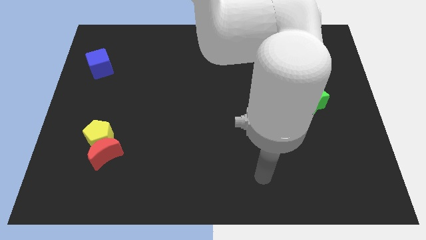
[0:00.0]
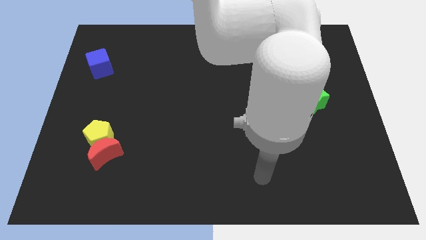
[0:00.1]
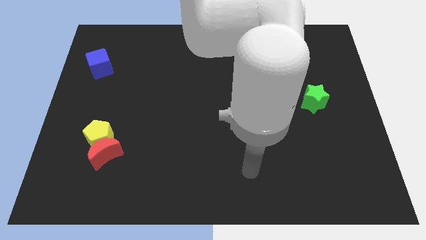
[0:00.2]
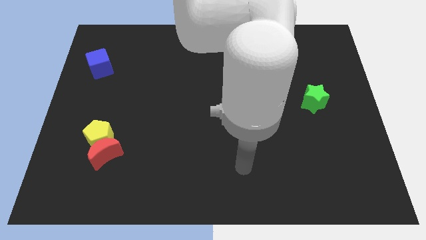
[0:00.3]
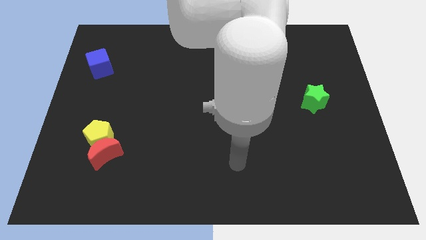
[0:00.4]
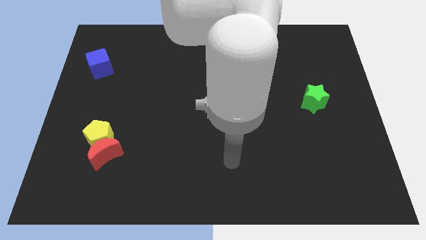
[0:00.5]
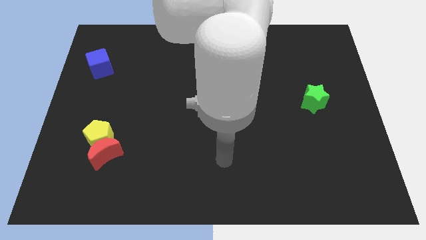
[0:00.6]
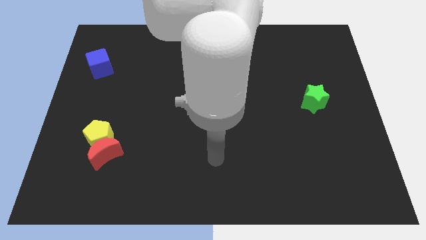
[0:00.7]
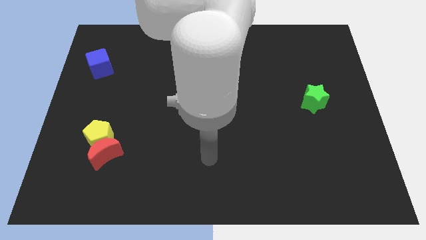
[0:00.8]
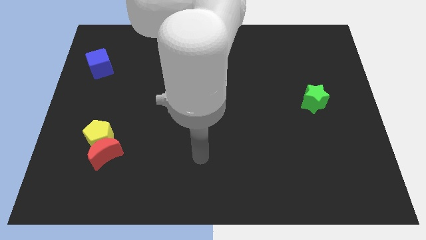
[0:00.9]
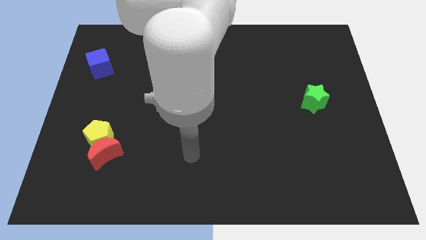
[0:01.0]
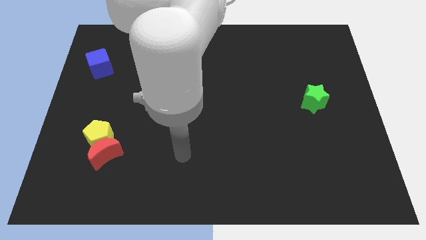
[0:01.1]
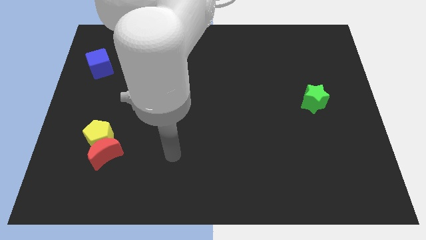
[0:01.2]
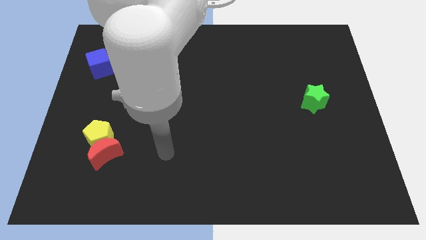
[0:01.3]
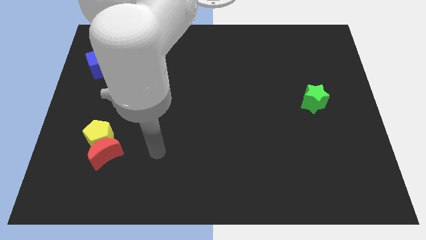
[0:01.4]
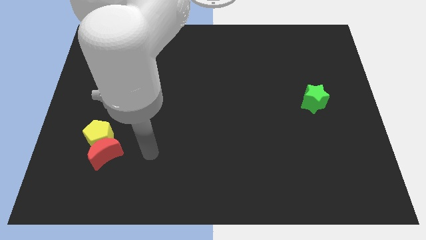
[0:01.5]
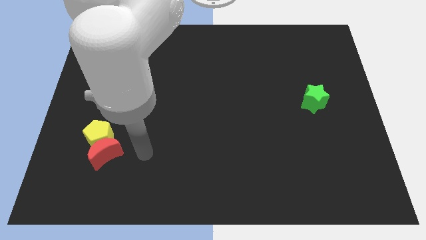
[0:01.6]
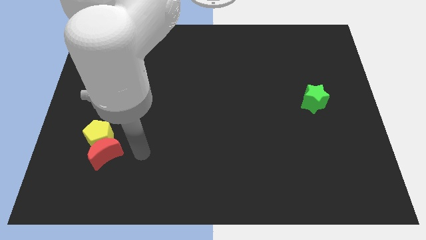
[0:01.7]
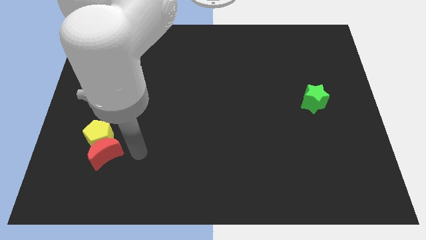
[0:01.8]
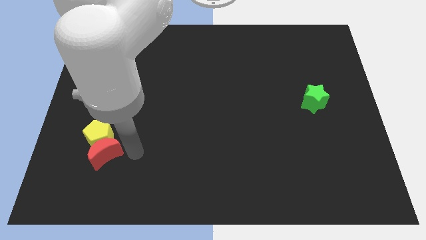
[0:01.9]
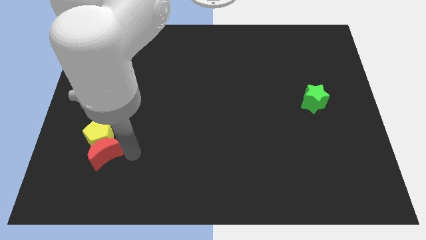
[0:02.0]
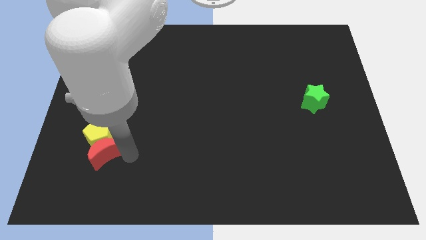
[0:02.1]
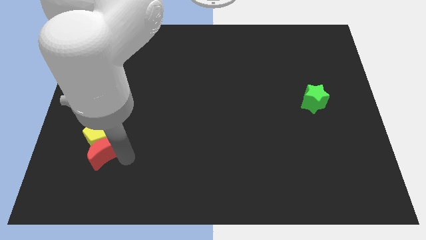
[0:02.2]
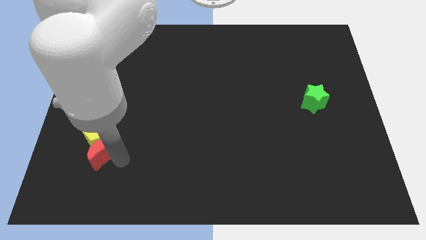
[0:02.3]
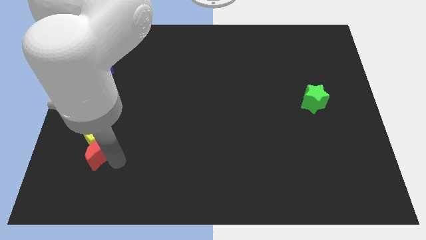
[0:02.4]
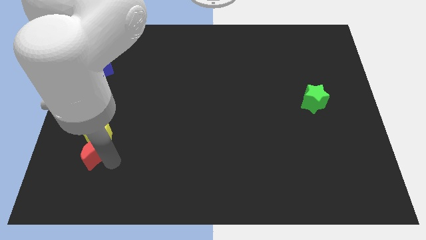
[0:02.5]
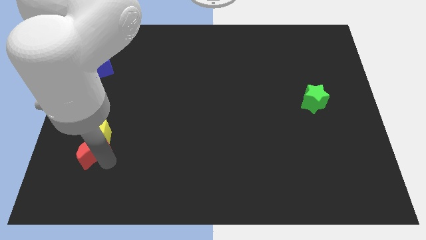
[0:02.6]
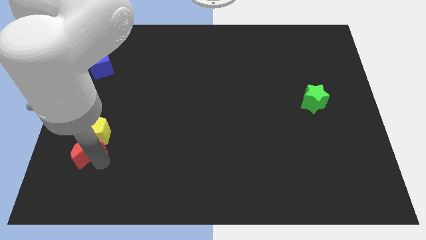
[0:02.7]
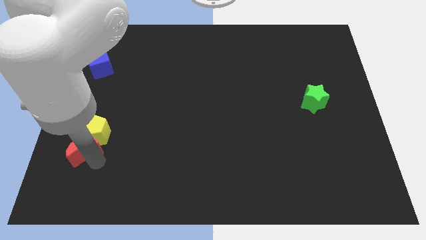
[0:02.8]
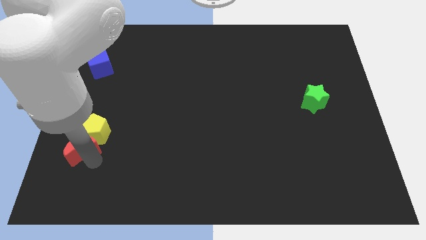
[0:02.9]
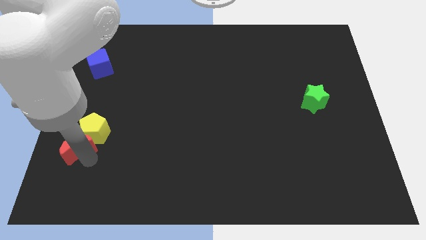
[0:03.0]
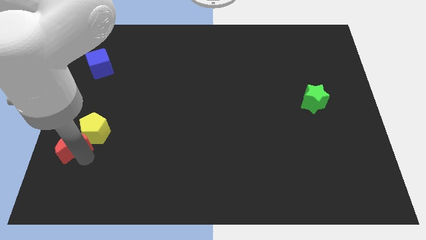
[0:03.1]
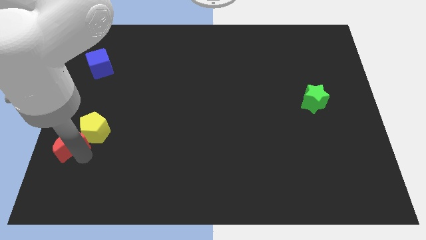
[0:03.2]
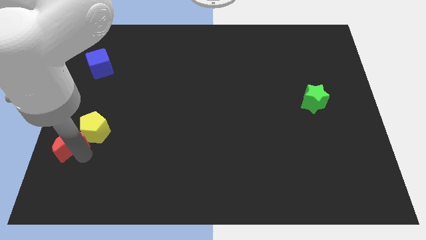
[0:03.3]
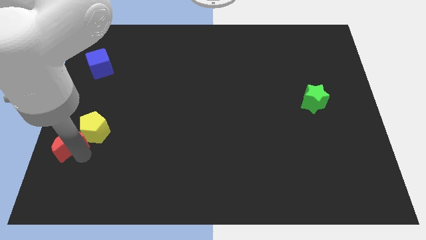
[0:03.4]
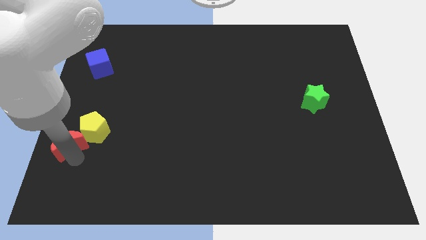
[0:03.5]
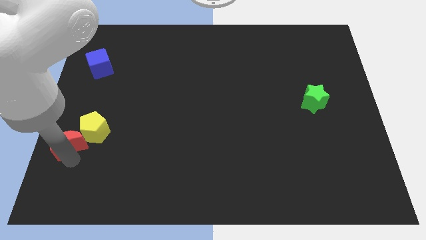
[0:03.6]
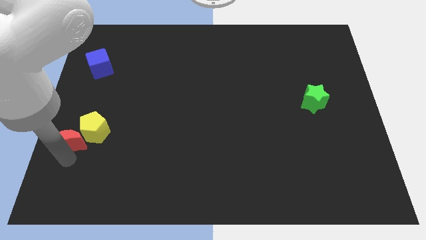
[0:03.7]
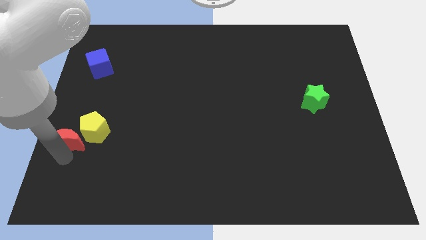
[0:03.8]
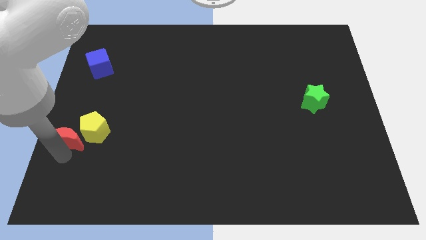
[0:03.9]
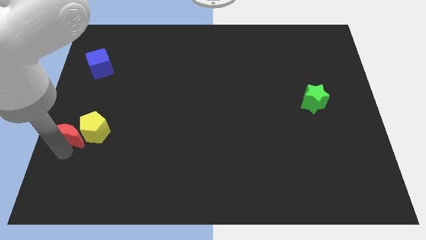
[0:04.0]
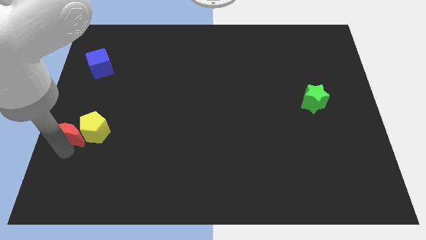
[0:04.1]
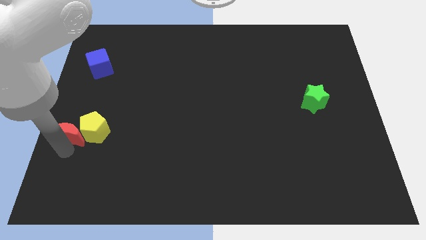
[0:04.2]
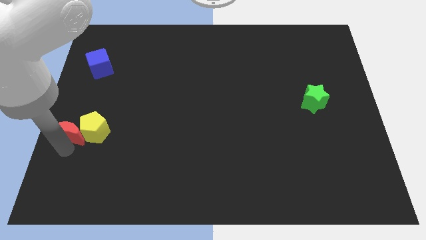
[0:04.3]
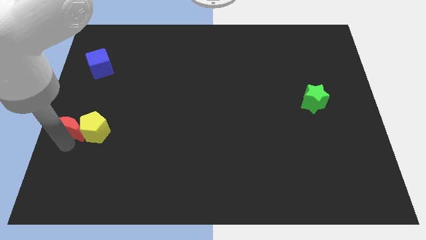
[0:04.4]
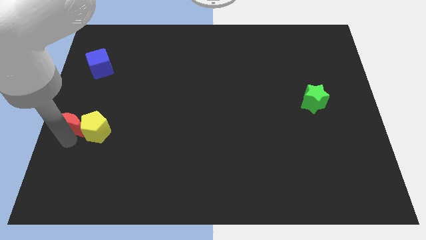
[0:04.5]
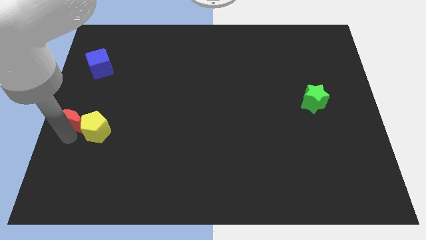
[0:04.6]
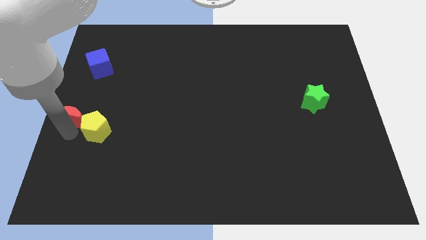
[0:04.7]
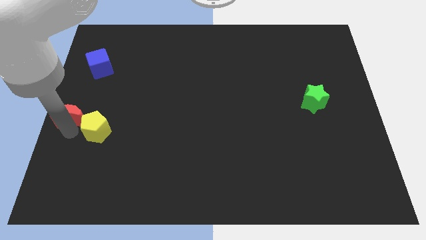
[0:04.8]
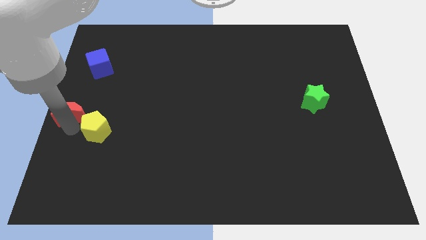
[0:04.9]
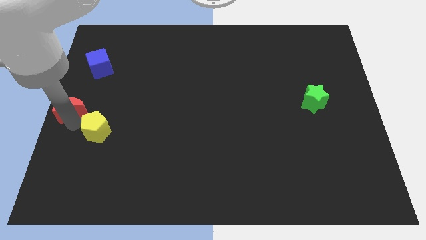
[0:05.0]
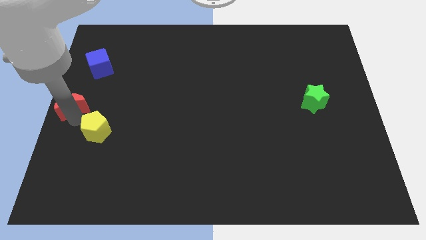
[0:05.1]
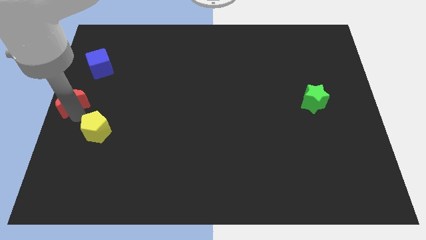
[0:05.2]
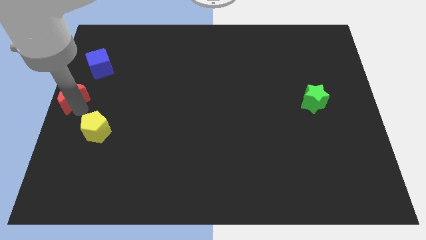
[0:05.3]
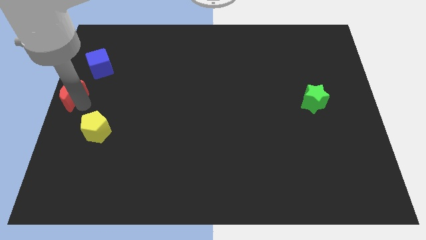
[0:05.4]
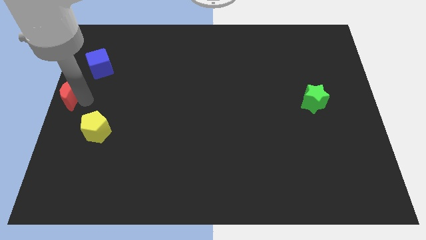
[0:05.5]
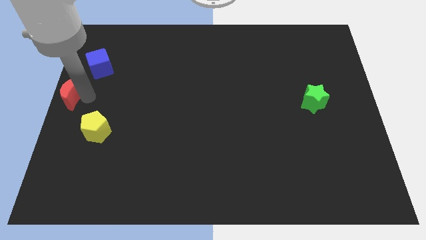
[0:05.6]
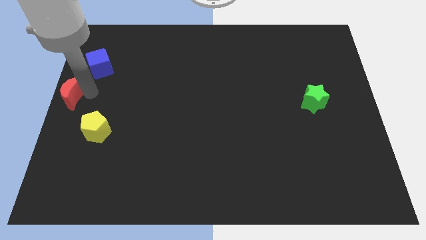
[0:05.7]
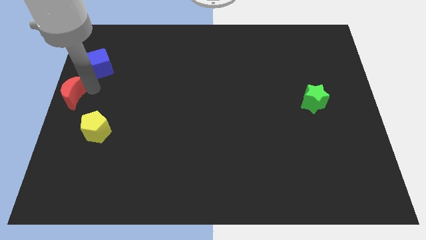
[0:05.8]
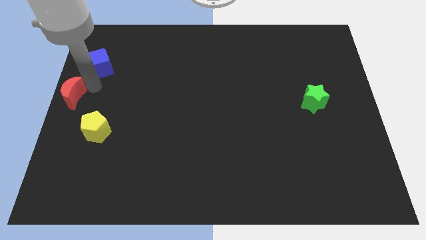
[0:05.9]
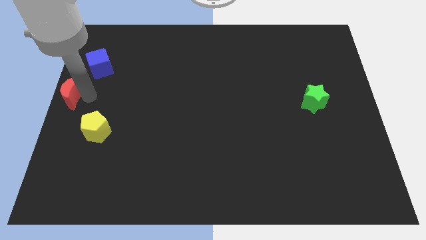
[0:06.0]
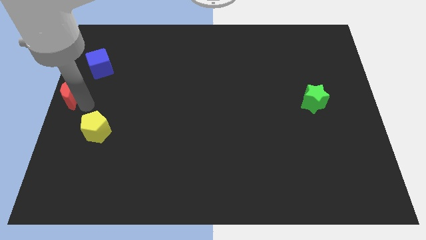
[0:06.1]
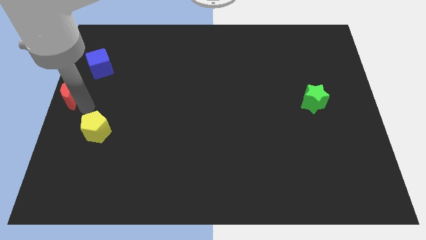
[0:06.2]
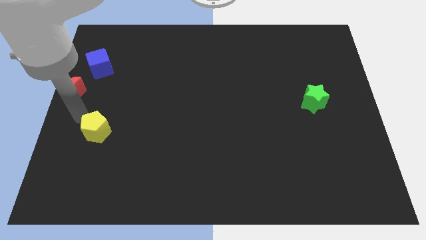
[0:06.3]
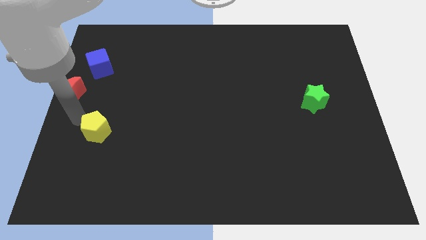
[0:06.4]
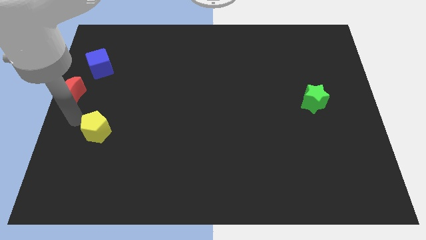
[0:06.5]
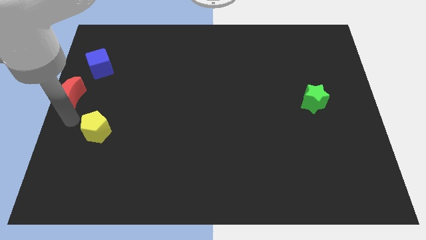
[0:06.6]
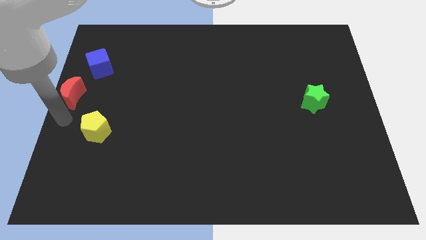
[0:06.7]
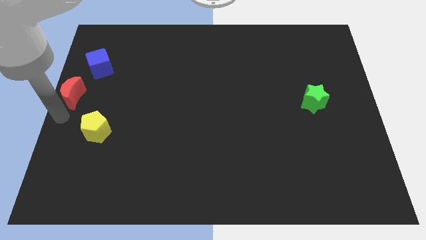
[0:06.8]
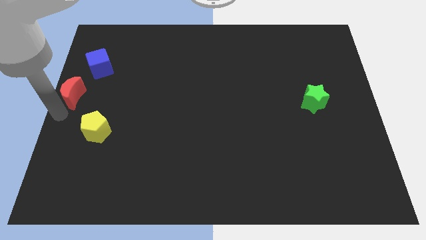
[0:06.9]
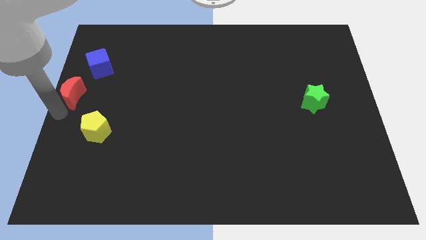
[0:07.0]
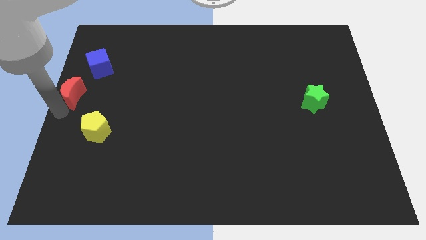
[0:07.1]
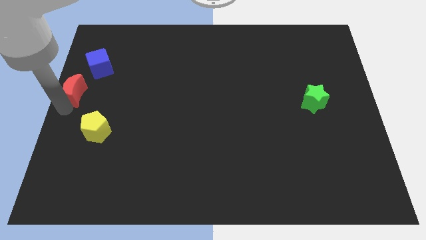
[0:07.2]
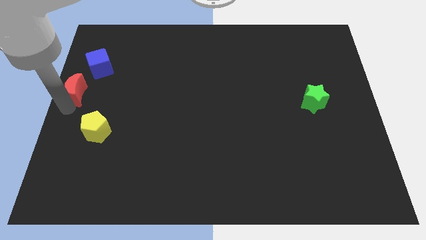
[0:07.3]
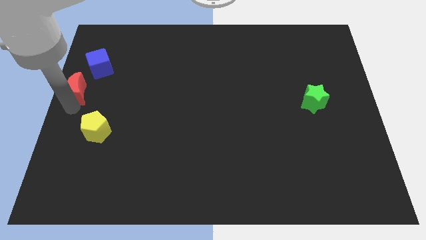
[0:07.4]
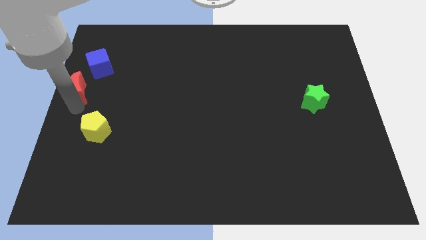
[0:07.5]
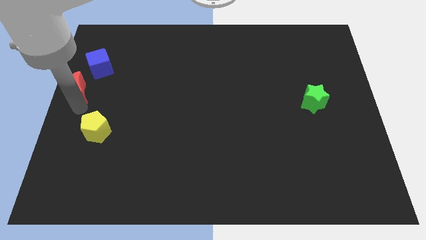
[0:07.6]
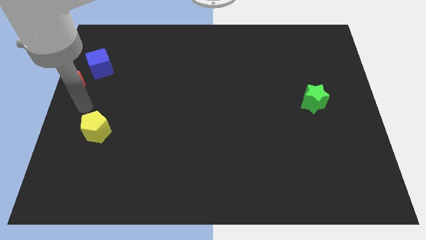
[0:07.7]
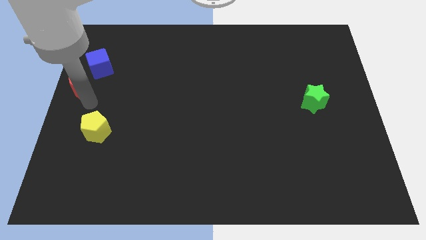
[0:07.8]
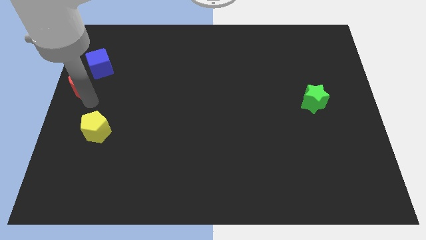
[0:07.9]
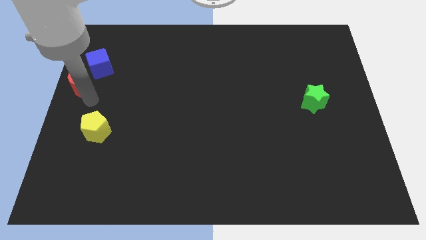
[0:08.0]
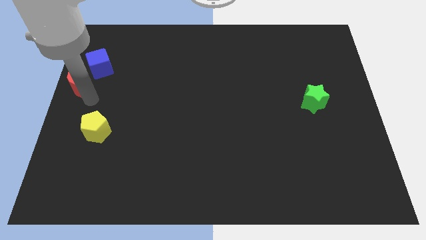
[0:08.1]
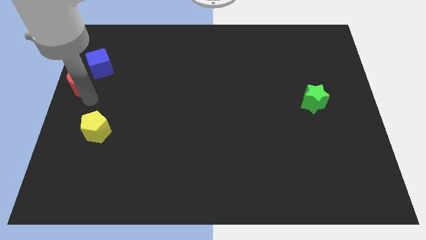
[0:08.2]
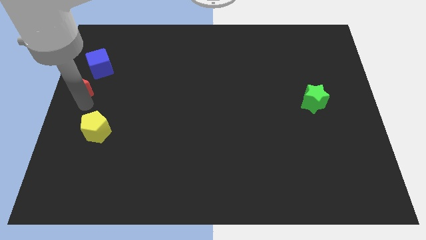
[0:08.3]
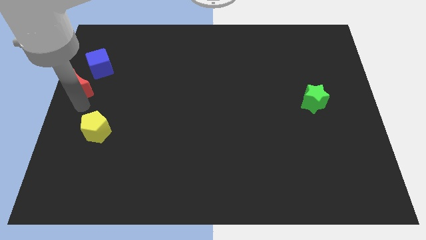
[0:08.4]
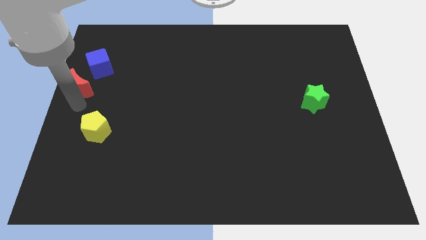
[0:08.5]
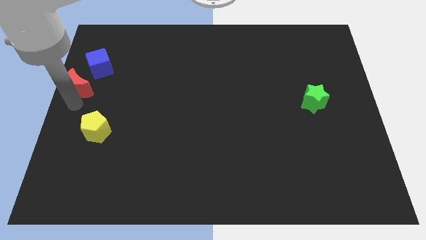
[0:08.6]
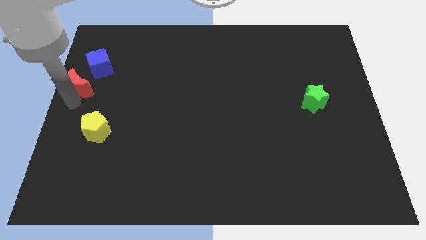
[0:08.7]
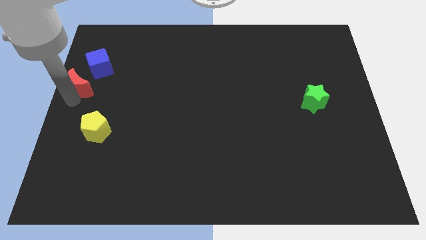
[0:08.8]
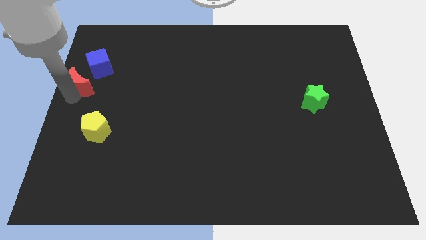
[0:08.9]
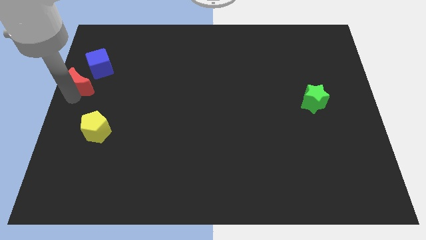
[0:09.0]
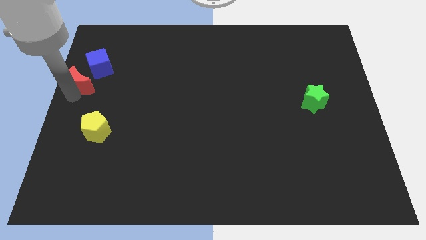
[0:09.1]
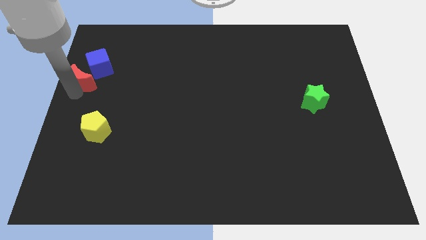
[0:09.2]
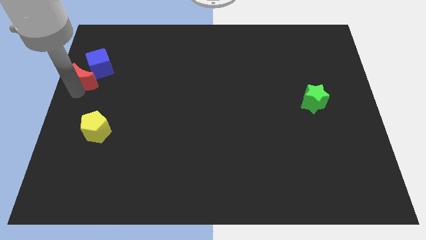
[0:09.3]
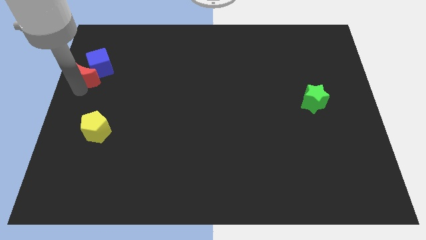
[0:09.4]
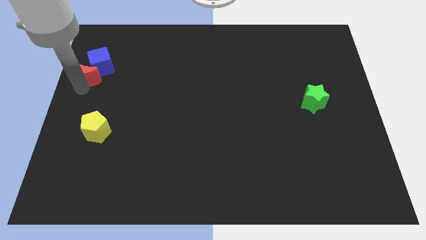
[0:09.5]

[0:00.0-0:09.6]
slide the red block next to the cube
